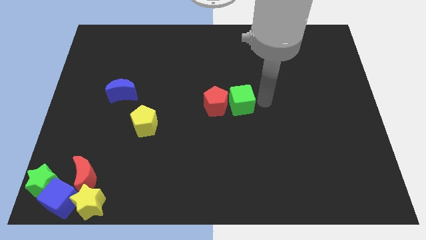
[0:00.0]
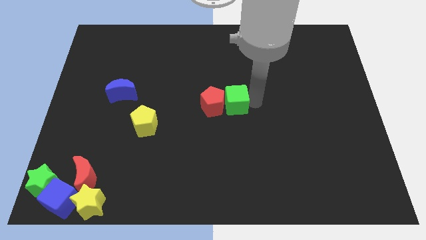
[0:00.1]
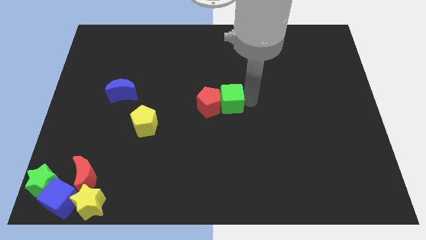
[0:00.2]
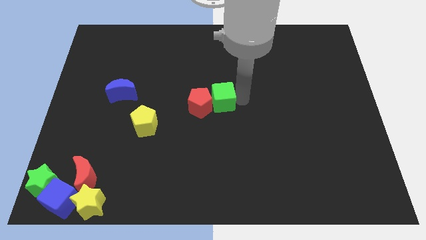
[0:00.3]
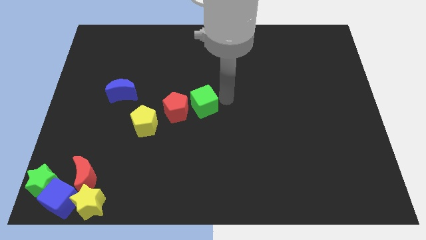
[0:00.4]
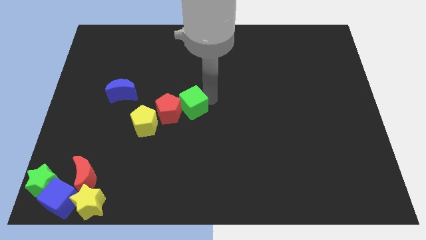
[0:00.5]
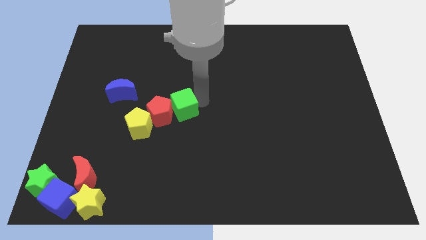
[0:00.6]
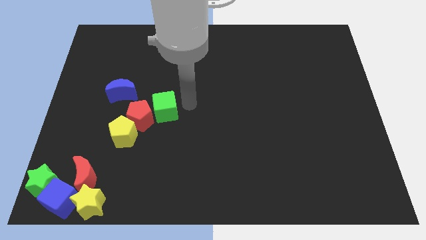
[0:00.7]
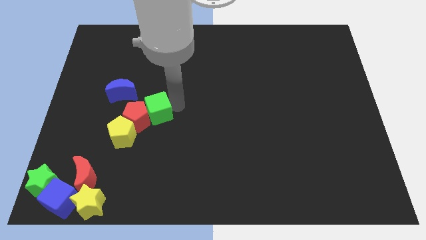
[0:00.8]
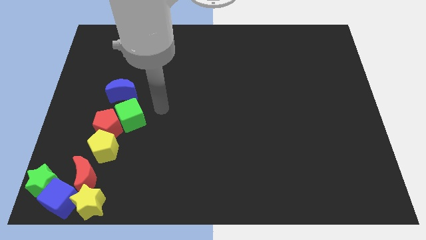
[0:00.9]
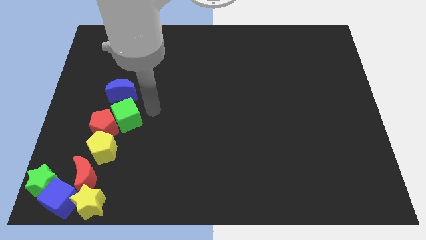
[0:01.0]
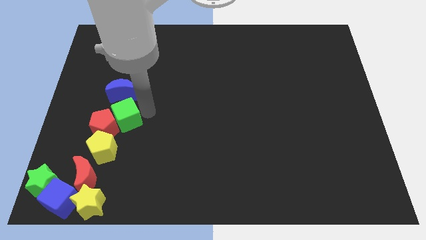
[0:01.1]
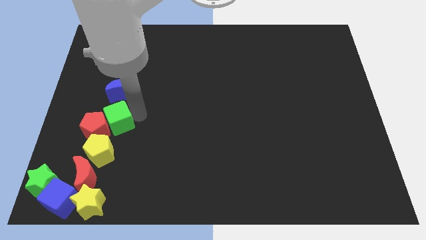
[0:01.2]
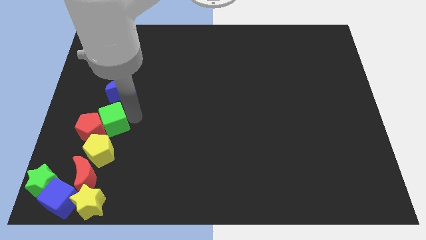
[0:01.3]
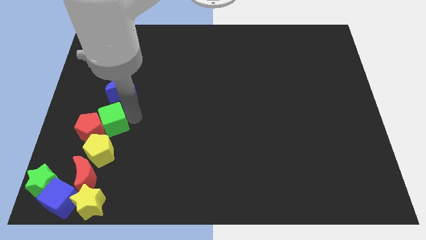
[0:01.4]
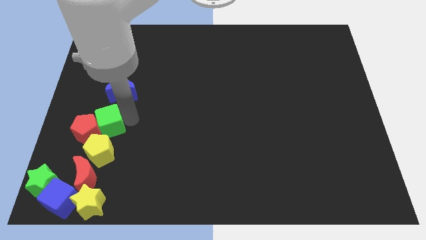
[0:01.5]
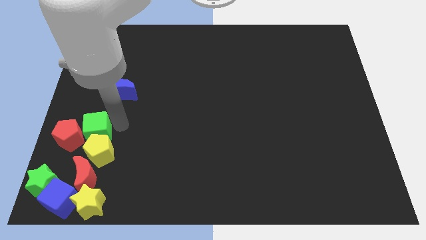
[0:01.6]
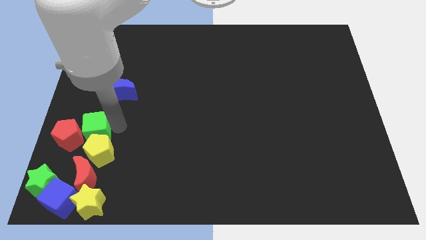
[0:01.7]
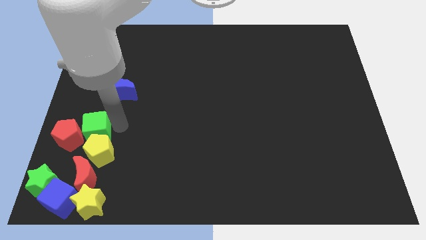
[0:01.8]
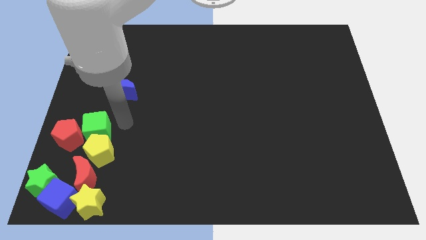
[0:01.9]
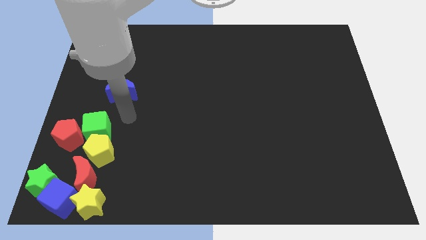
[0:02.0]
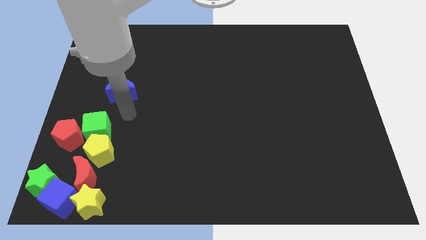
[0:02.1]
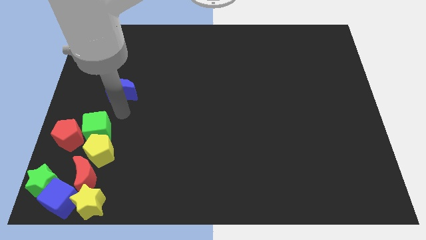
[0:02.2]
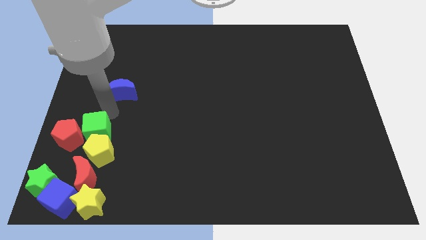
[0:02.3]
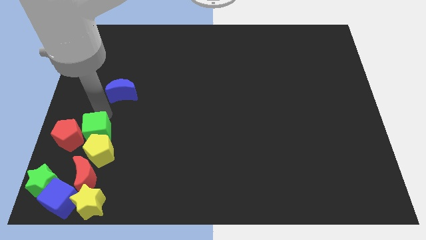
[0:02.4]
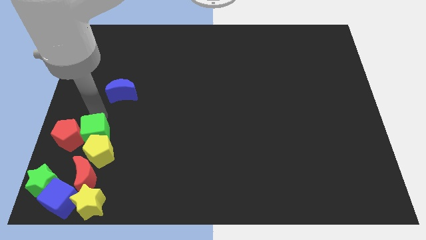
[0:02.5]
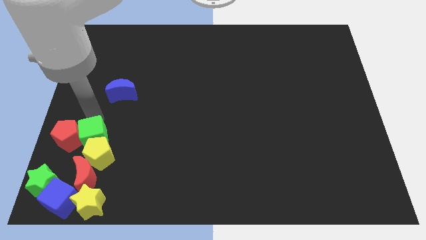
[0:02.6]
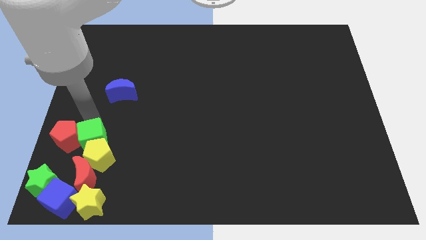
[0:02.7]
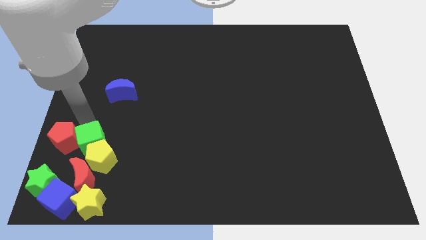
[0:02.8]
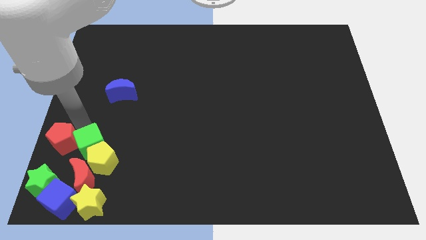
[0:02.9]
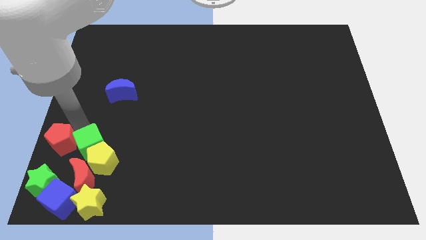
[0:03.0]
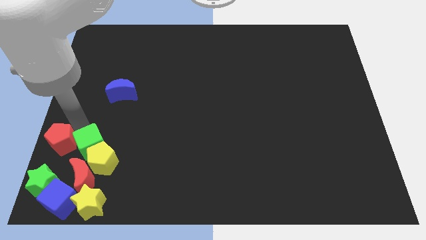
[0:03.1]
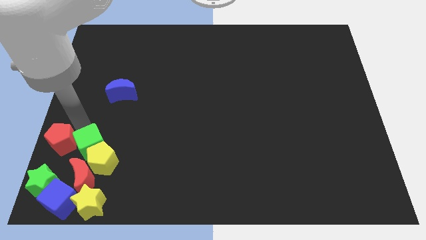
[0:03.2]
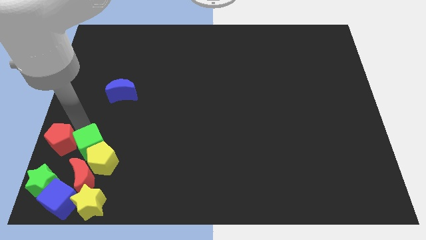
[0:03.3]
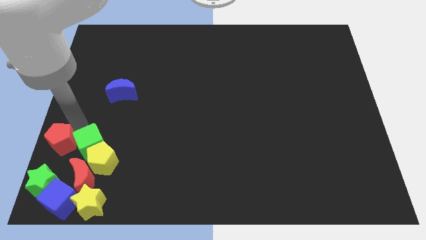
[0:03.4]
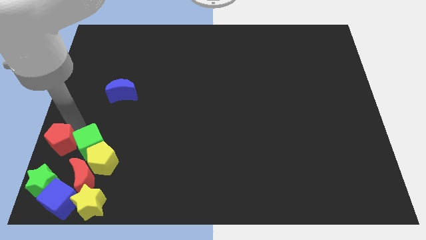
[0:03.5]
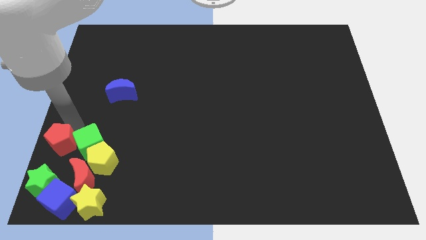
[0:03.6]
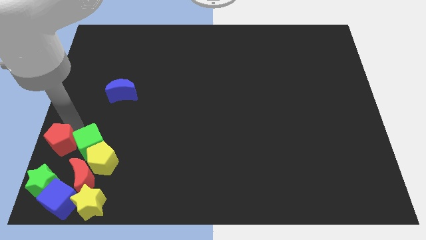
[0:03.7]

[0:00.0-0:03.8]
push green cube slightly towards down

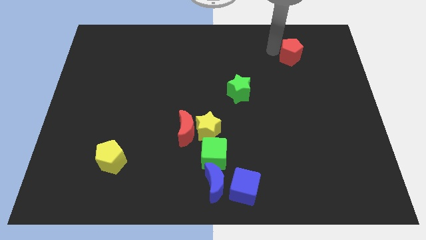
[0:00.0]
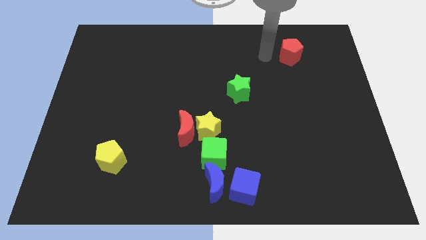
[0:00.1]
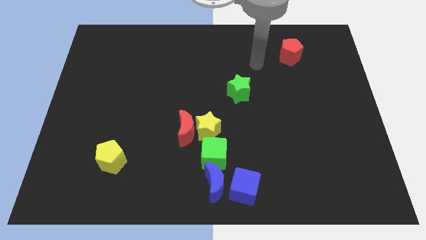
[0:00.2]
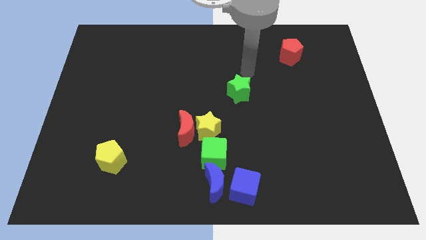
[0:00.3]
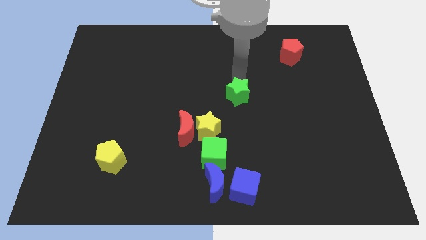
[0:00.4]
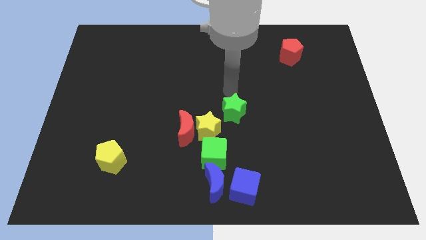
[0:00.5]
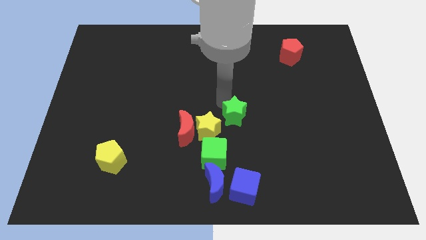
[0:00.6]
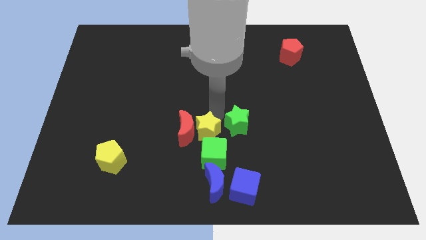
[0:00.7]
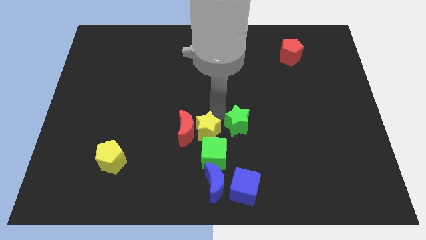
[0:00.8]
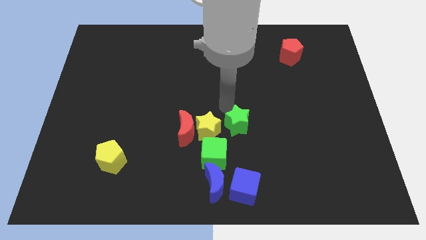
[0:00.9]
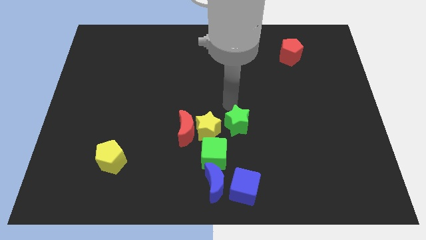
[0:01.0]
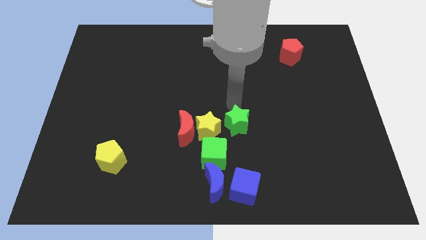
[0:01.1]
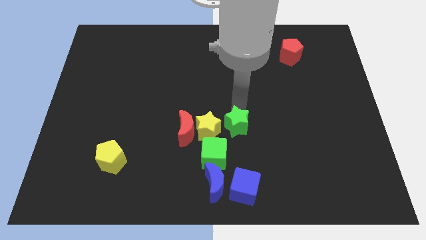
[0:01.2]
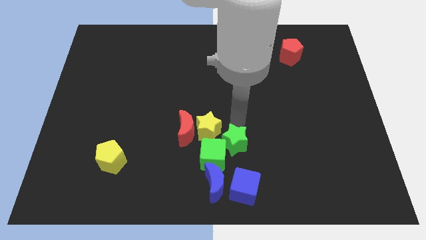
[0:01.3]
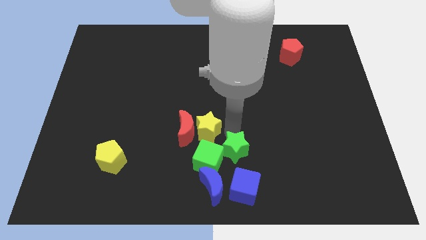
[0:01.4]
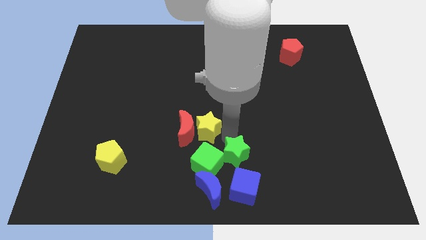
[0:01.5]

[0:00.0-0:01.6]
push the green star into the green cube

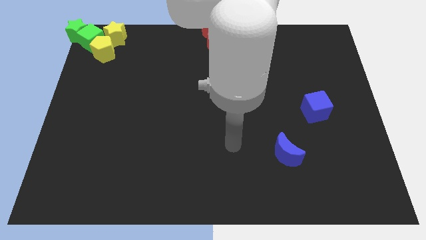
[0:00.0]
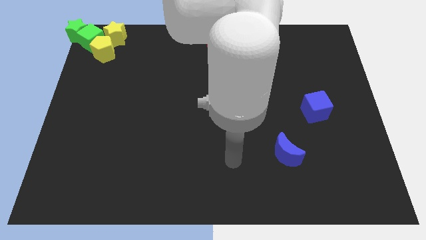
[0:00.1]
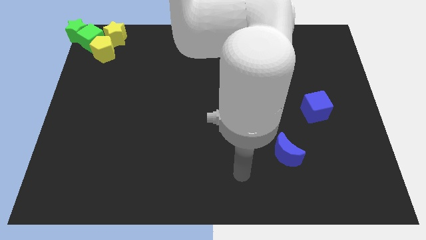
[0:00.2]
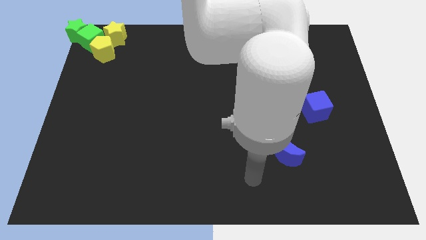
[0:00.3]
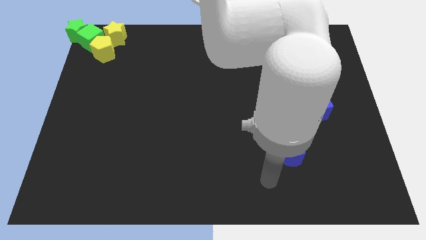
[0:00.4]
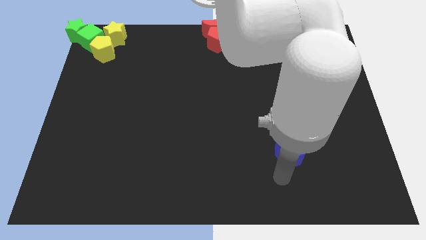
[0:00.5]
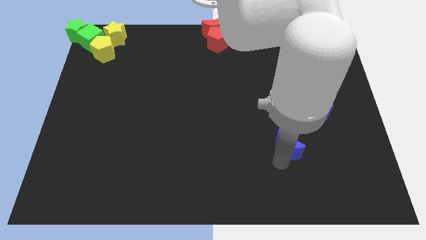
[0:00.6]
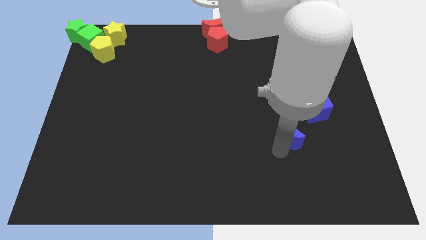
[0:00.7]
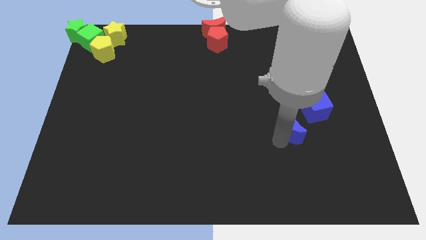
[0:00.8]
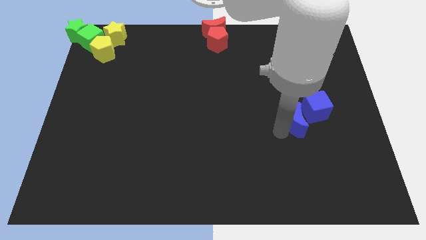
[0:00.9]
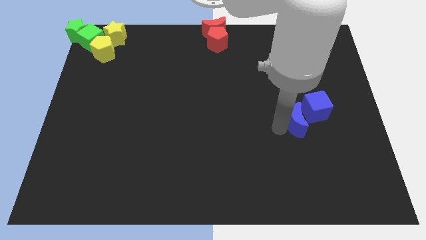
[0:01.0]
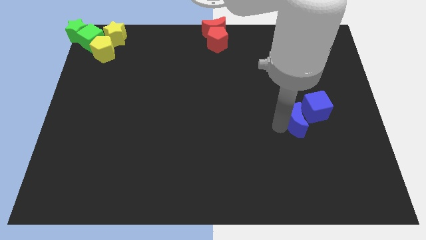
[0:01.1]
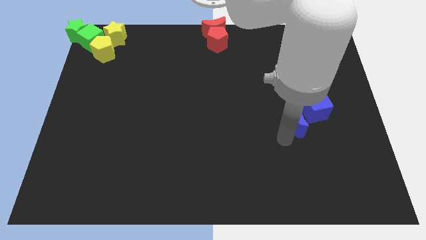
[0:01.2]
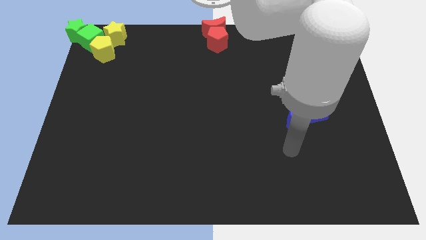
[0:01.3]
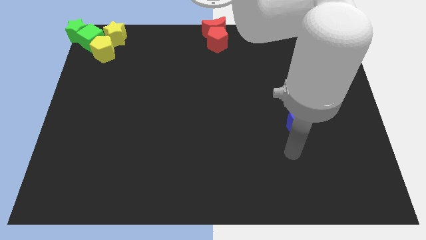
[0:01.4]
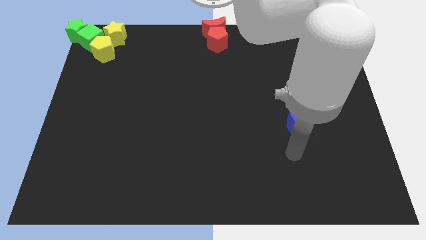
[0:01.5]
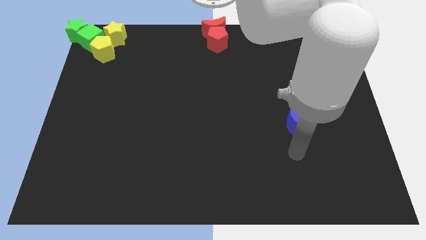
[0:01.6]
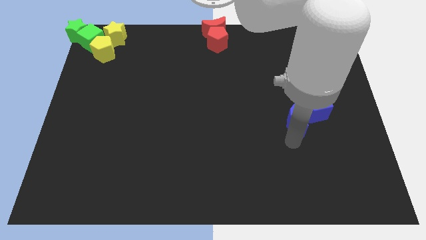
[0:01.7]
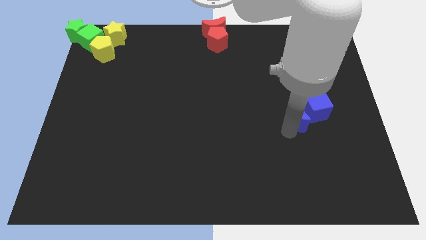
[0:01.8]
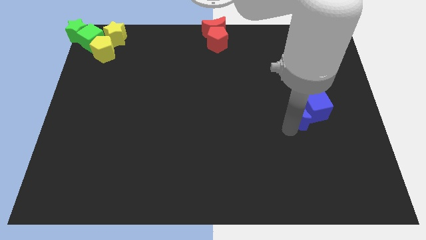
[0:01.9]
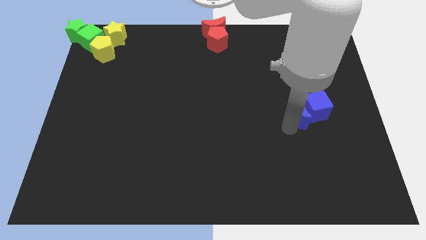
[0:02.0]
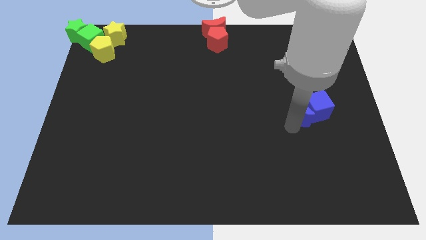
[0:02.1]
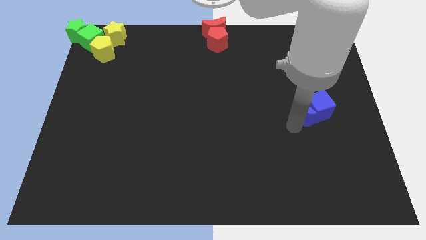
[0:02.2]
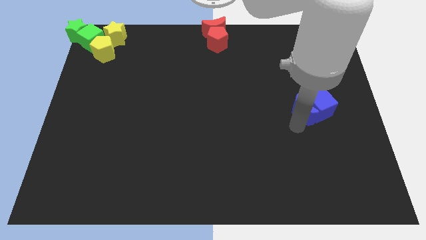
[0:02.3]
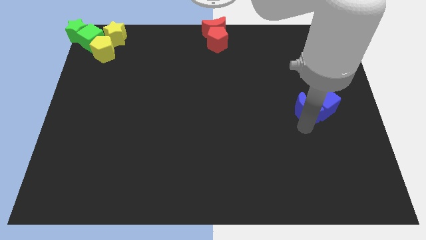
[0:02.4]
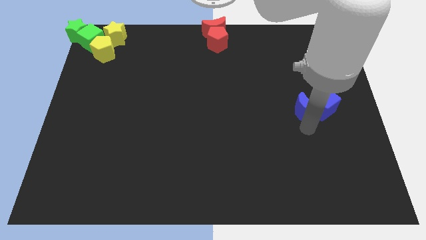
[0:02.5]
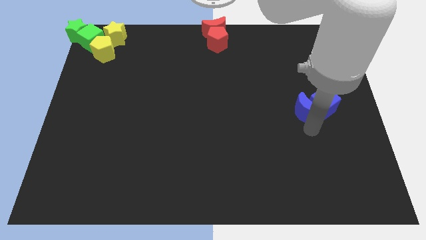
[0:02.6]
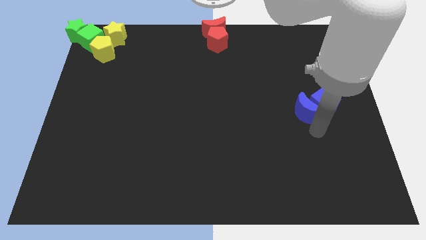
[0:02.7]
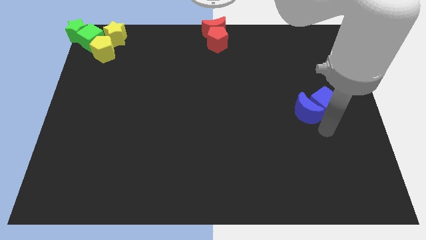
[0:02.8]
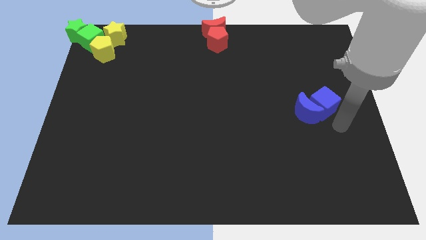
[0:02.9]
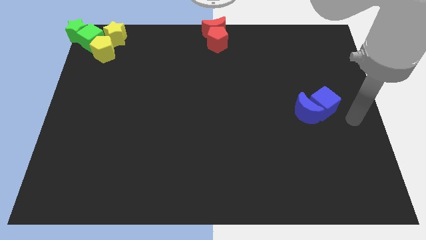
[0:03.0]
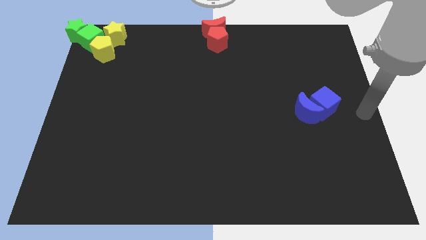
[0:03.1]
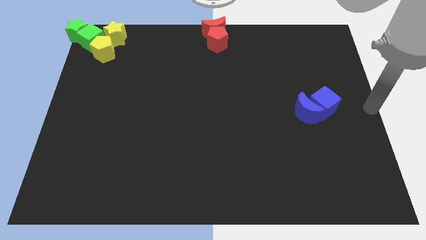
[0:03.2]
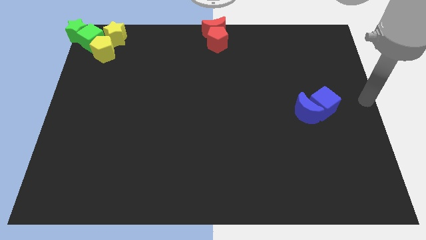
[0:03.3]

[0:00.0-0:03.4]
push the blue moon into blue cube

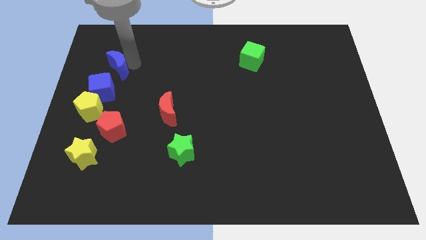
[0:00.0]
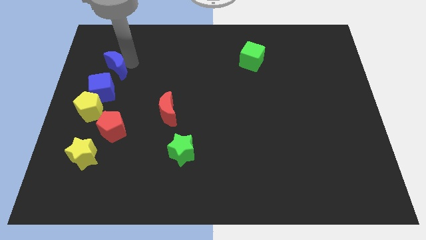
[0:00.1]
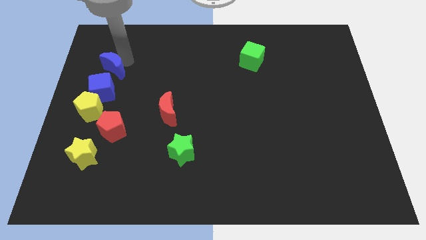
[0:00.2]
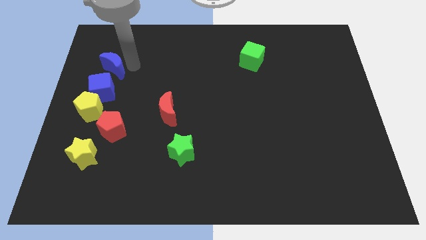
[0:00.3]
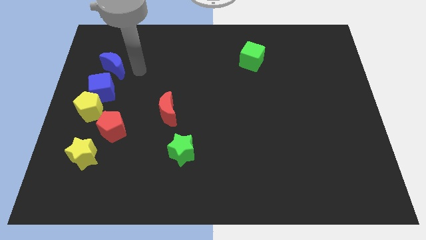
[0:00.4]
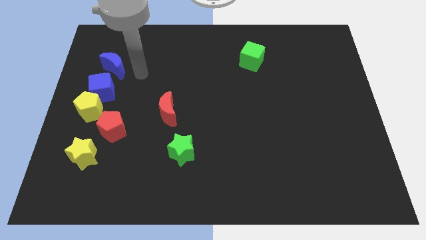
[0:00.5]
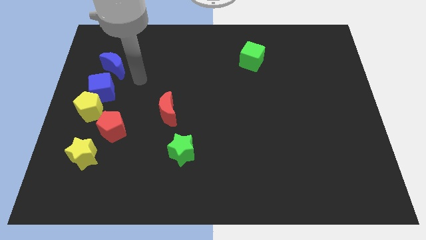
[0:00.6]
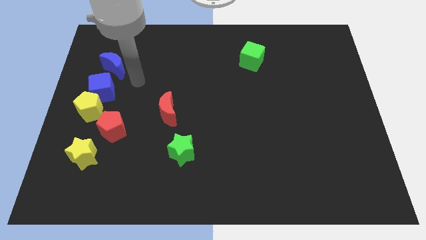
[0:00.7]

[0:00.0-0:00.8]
push the blue crescent close to the blue cube
